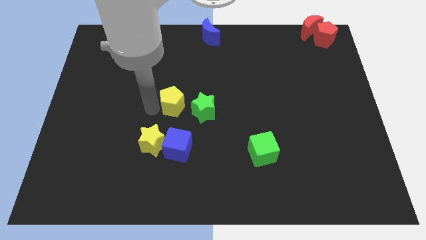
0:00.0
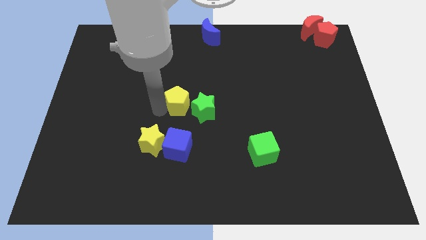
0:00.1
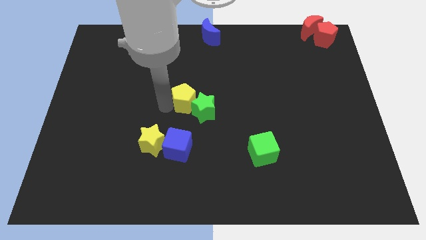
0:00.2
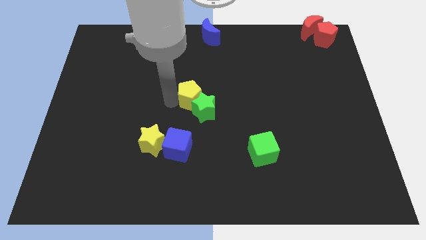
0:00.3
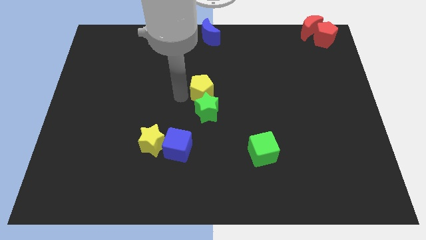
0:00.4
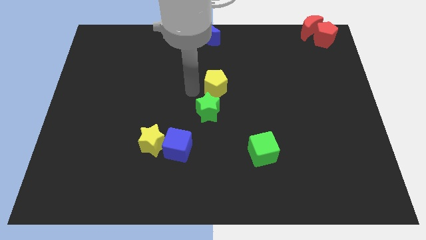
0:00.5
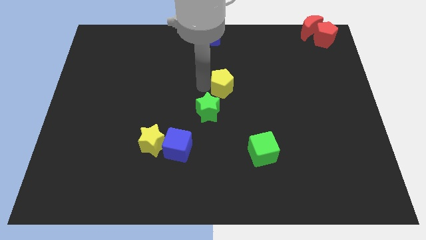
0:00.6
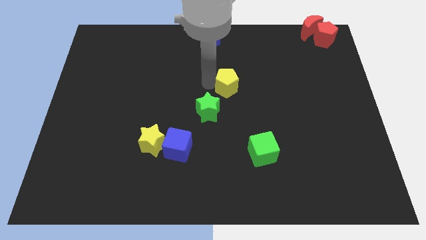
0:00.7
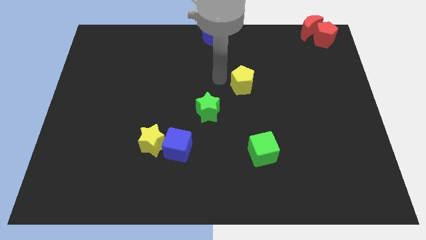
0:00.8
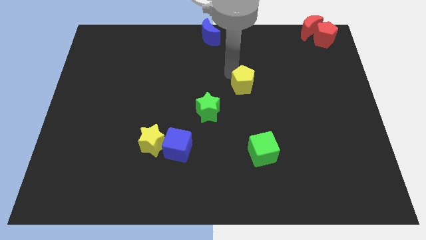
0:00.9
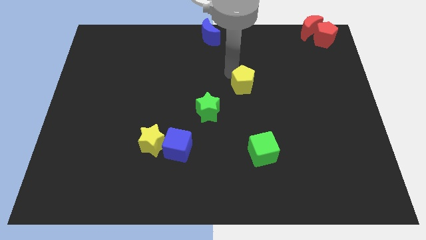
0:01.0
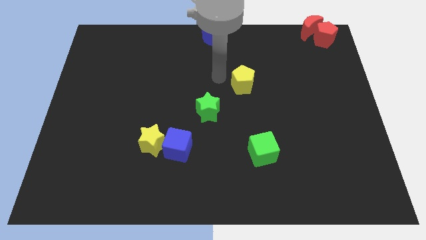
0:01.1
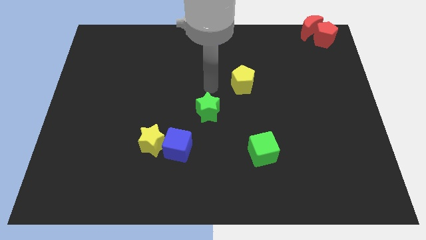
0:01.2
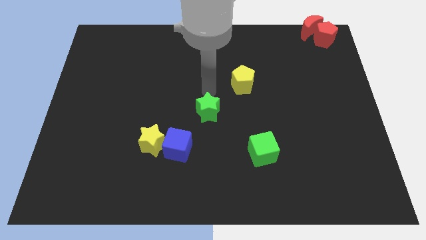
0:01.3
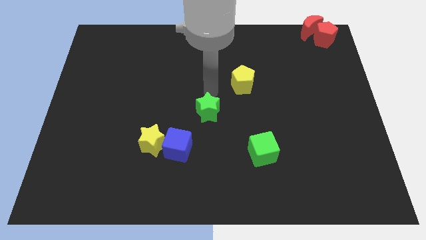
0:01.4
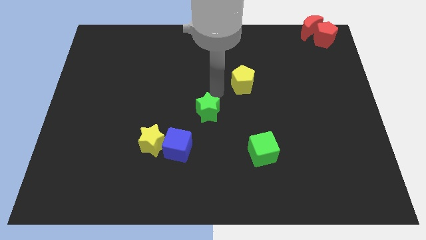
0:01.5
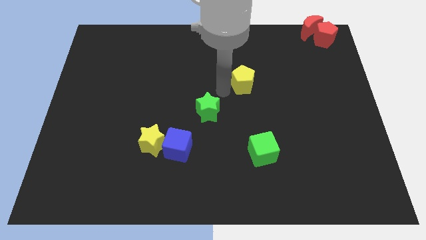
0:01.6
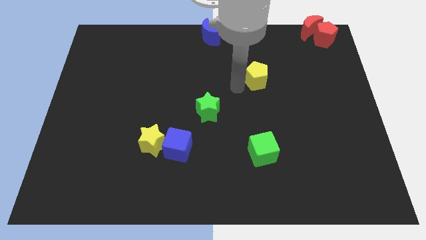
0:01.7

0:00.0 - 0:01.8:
push the yellow pentagon to the top of the green cube

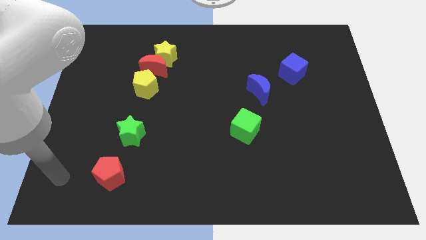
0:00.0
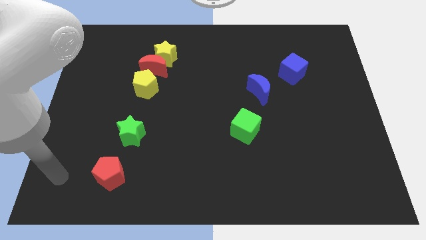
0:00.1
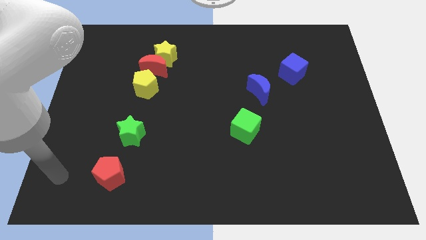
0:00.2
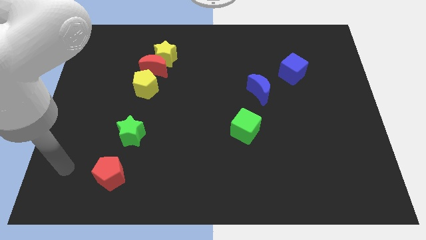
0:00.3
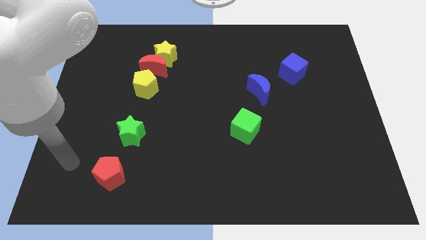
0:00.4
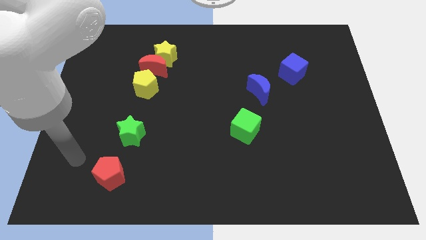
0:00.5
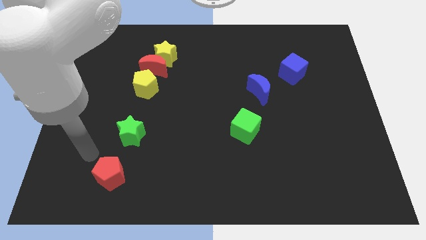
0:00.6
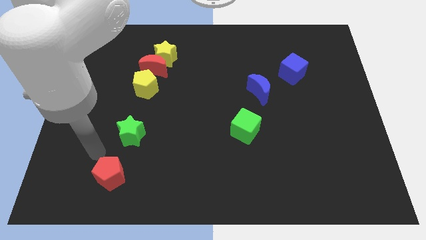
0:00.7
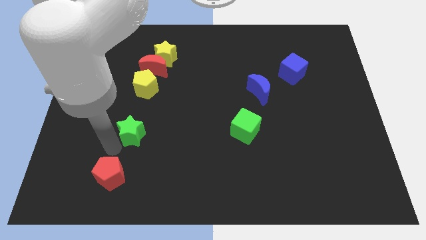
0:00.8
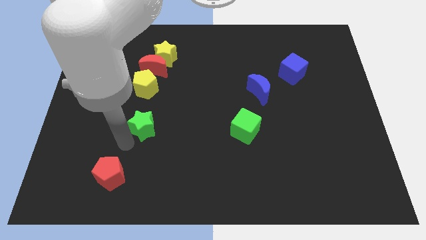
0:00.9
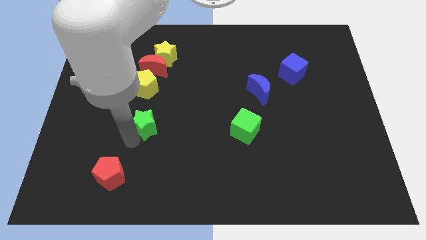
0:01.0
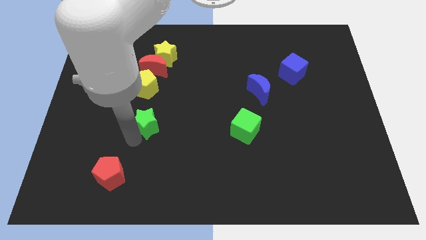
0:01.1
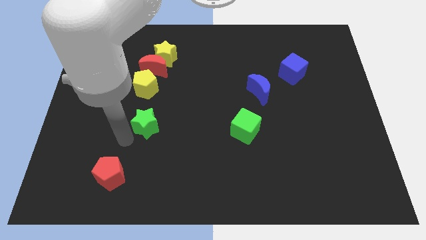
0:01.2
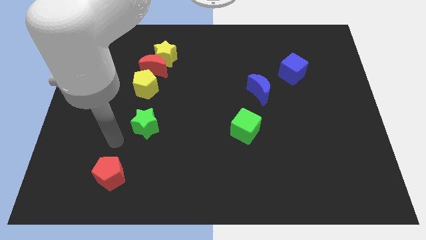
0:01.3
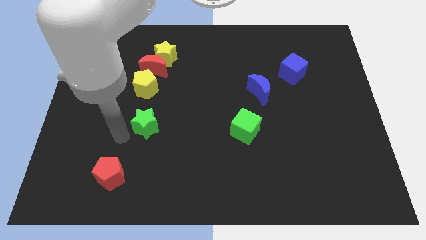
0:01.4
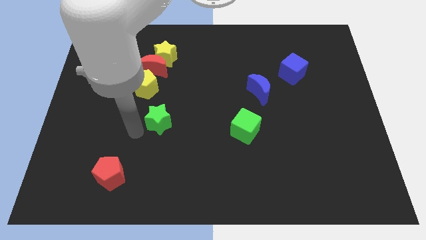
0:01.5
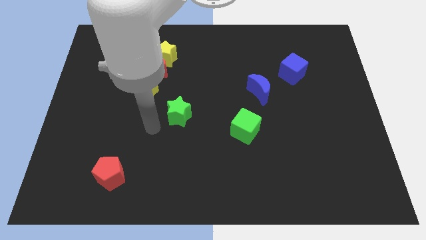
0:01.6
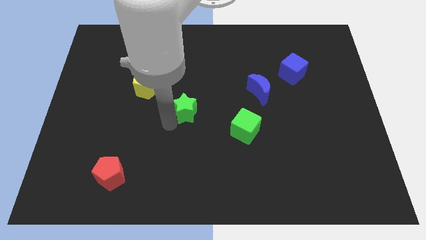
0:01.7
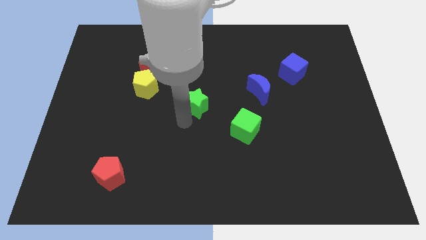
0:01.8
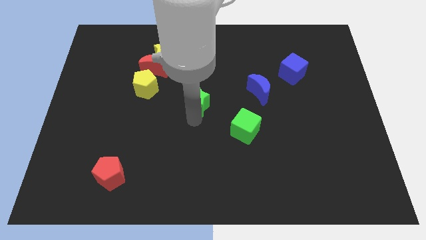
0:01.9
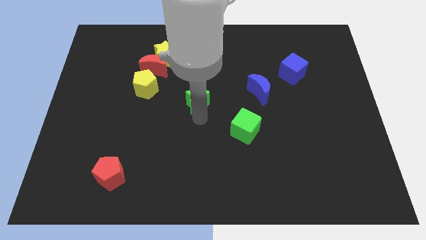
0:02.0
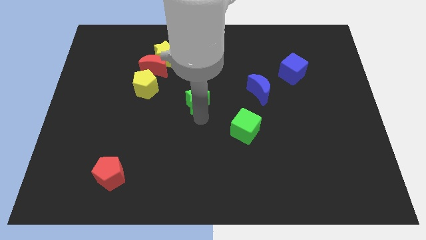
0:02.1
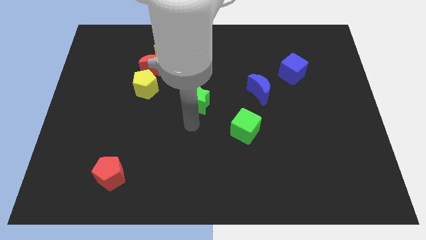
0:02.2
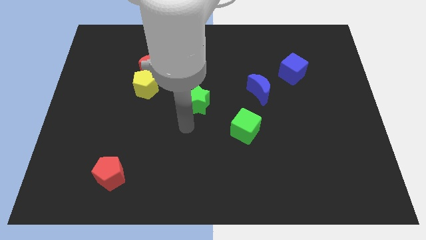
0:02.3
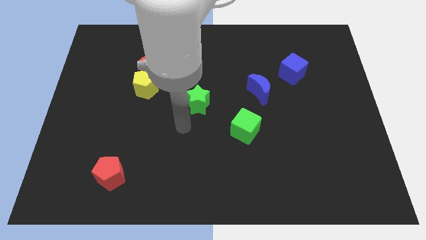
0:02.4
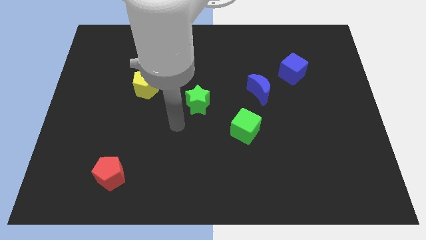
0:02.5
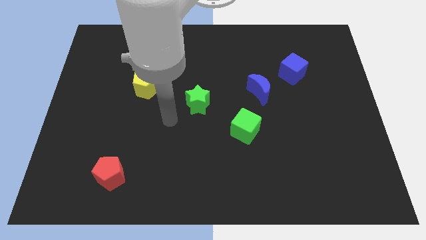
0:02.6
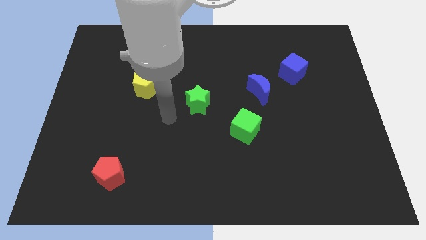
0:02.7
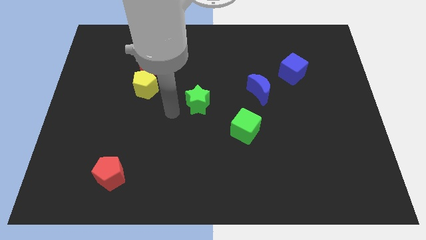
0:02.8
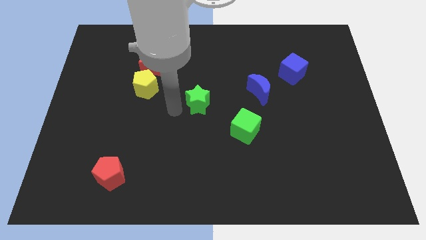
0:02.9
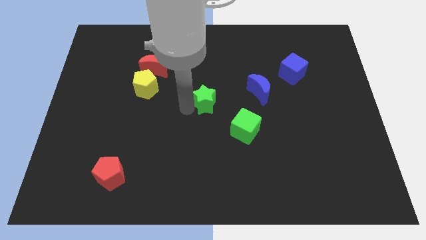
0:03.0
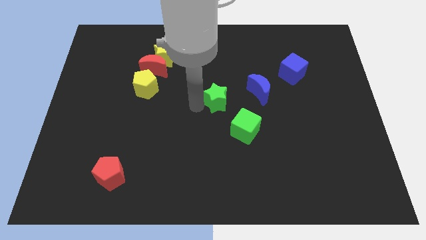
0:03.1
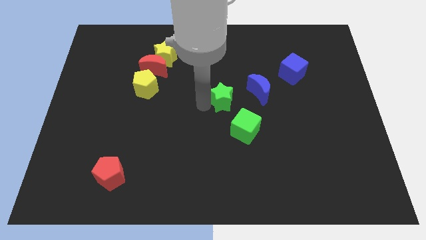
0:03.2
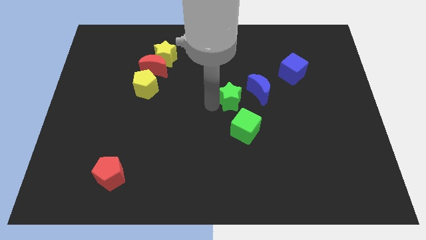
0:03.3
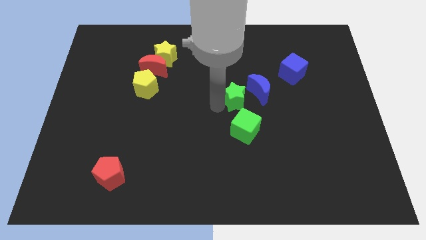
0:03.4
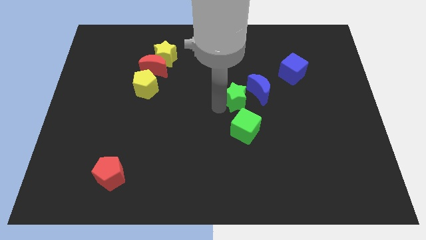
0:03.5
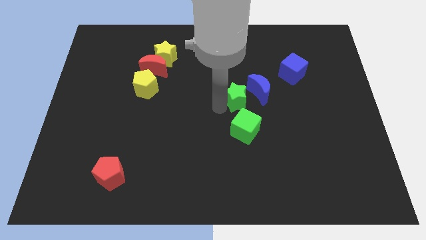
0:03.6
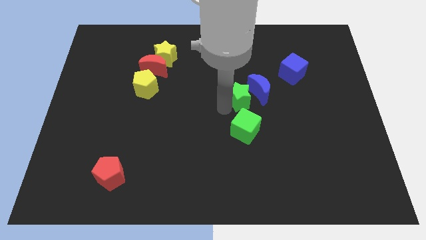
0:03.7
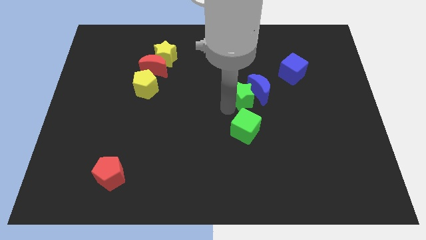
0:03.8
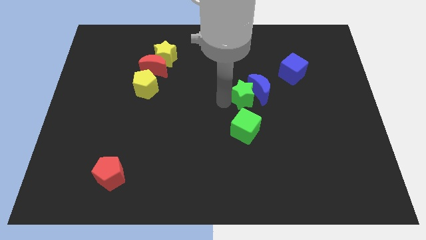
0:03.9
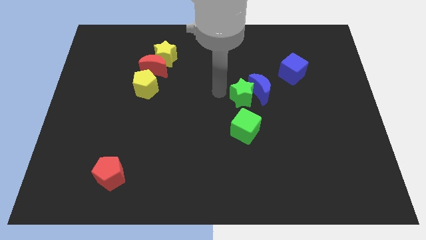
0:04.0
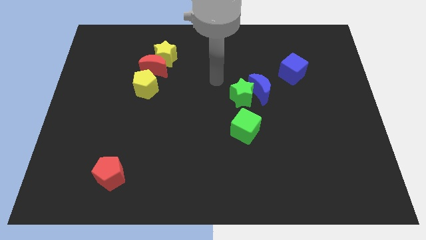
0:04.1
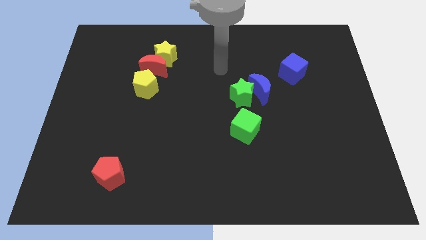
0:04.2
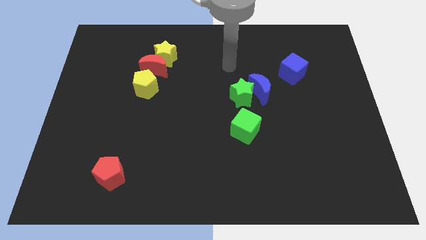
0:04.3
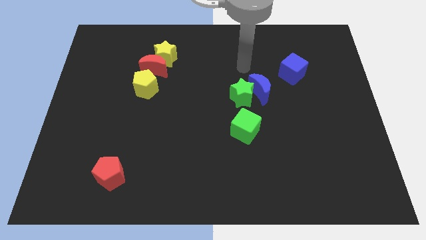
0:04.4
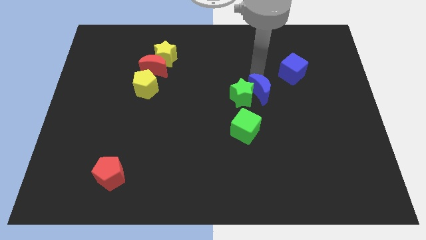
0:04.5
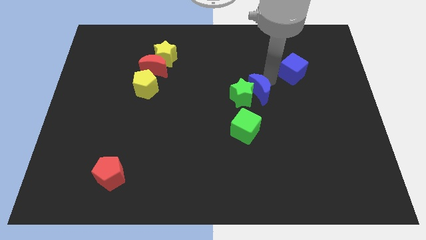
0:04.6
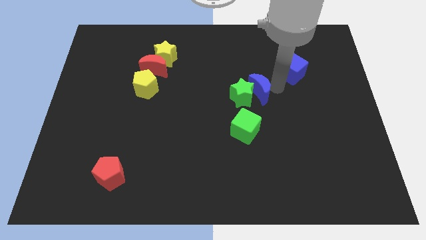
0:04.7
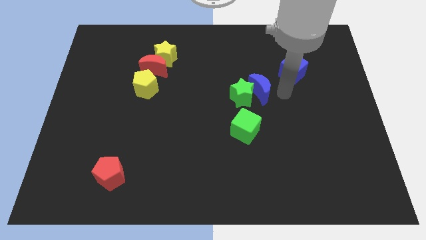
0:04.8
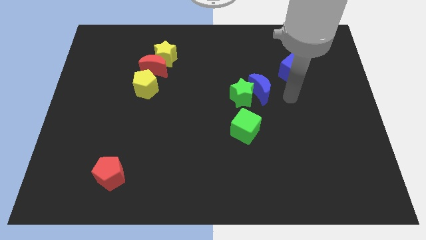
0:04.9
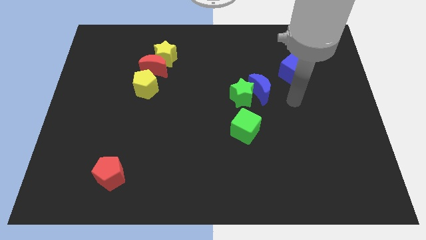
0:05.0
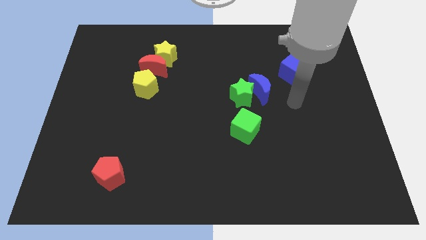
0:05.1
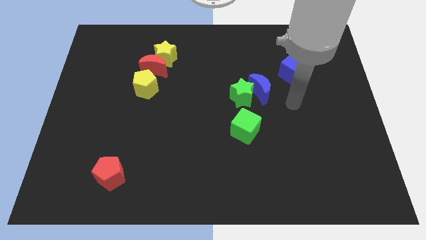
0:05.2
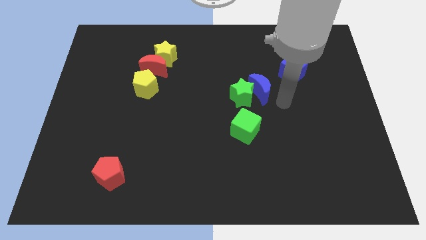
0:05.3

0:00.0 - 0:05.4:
push the green star above the green cube

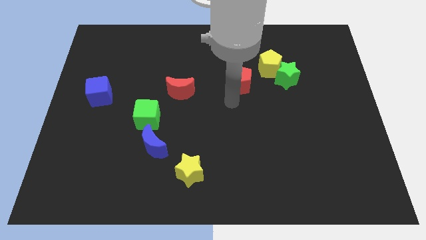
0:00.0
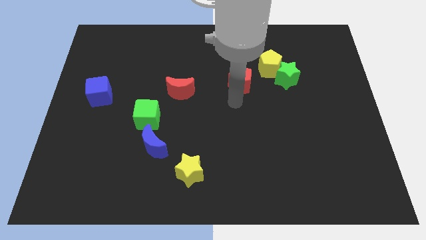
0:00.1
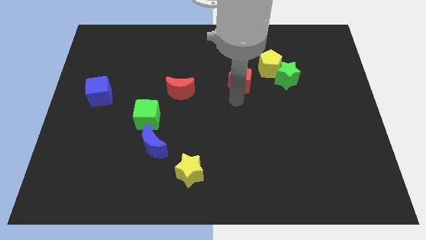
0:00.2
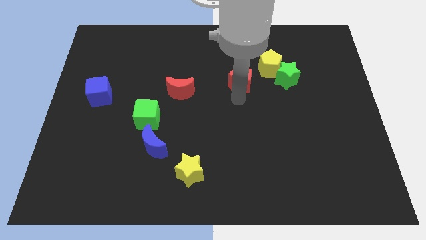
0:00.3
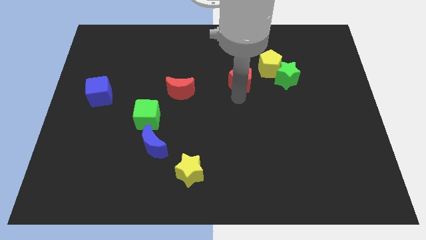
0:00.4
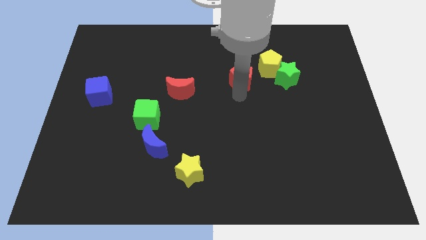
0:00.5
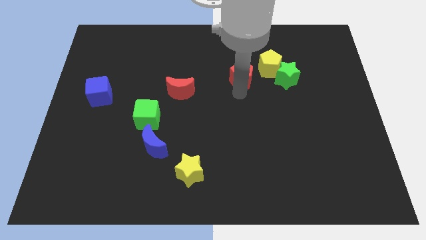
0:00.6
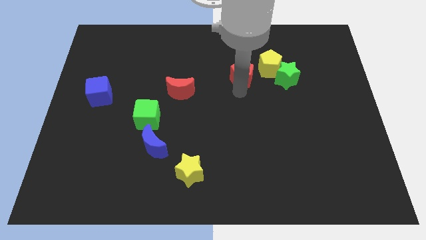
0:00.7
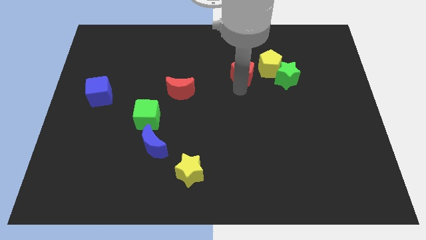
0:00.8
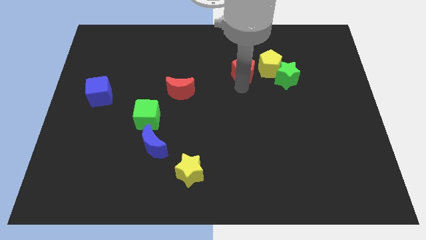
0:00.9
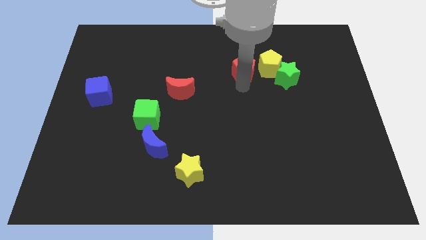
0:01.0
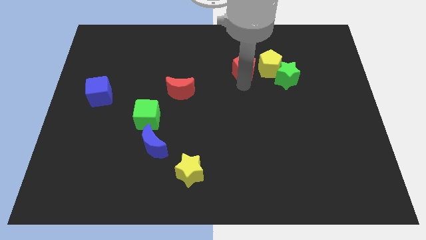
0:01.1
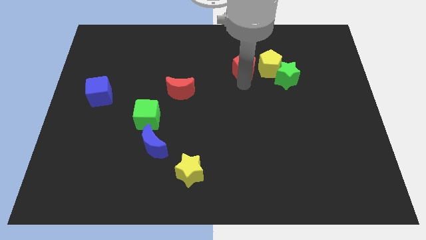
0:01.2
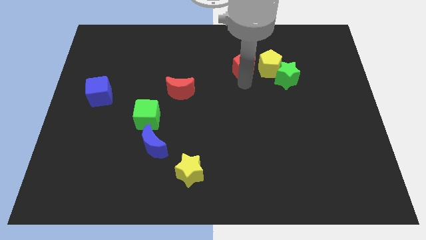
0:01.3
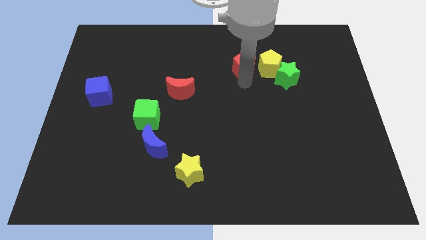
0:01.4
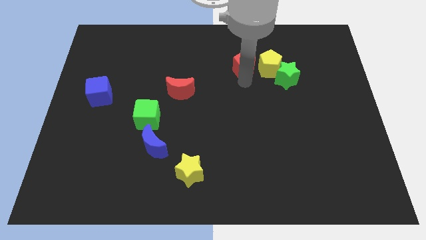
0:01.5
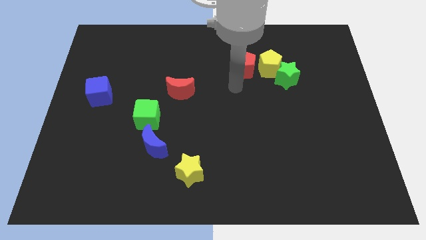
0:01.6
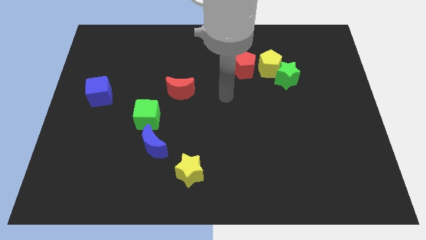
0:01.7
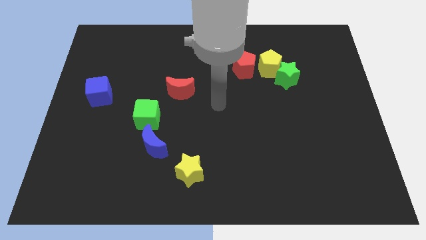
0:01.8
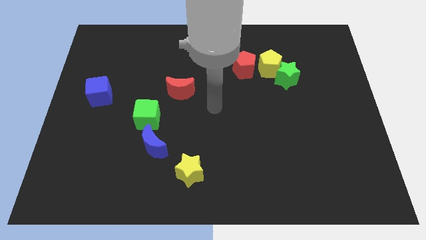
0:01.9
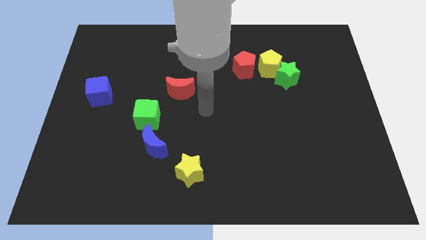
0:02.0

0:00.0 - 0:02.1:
push red pentagon to the left of yellow pentagon
